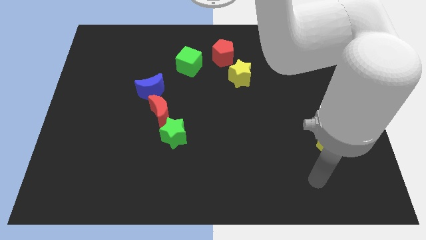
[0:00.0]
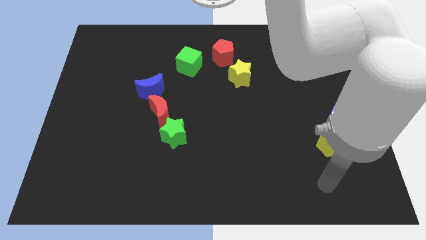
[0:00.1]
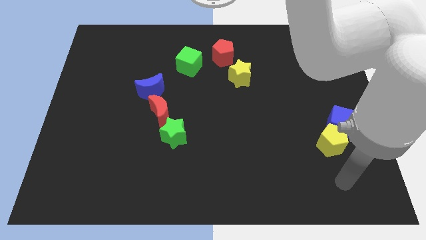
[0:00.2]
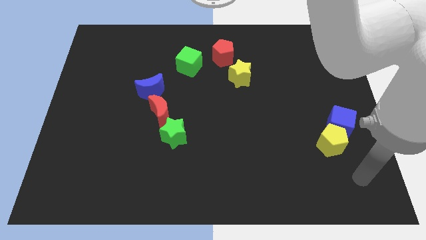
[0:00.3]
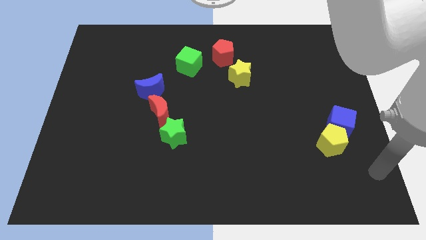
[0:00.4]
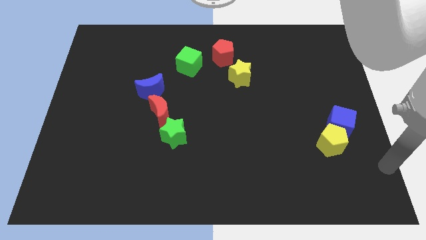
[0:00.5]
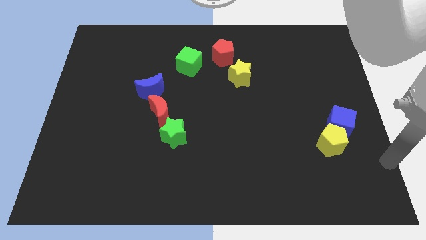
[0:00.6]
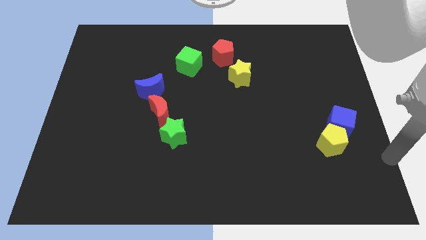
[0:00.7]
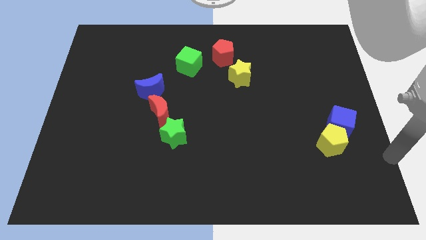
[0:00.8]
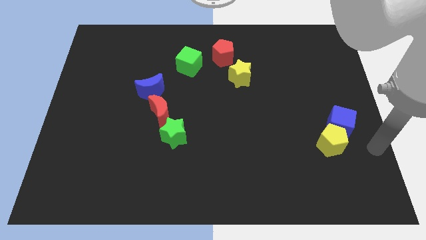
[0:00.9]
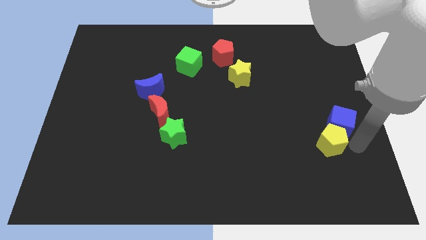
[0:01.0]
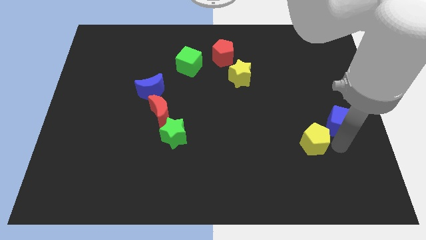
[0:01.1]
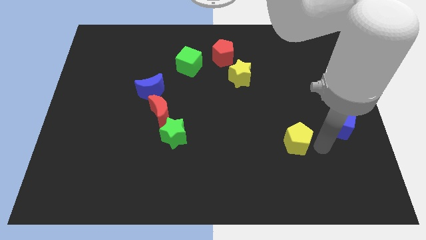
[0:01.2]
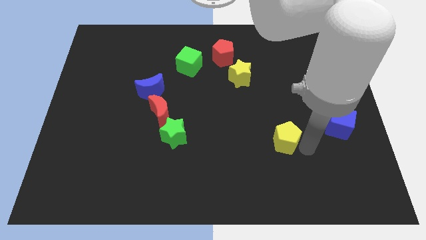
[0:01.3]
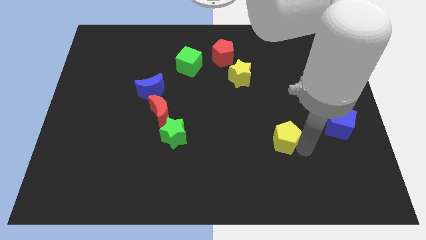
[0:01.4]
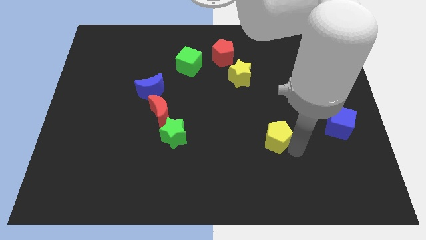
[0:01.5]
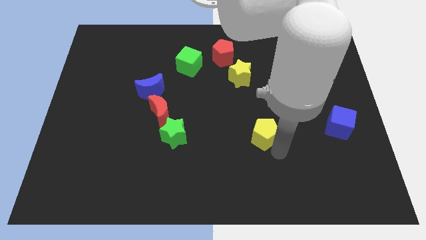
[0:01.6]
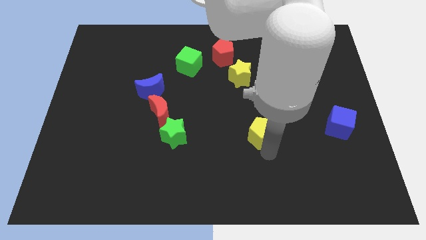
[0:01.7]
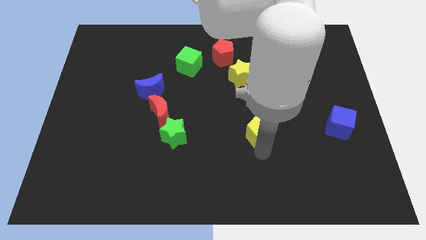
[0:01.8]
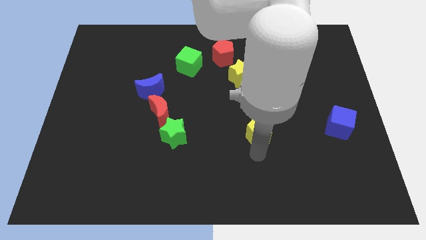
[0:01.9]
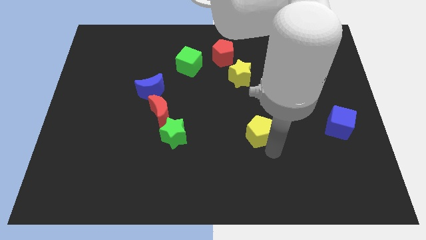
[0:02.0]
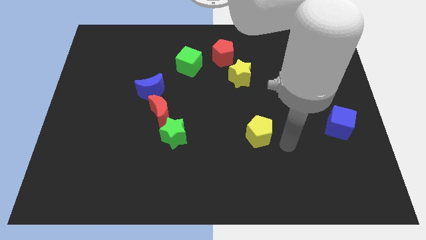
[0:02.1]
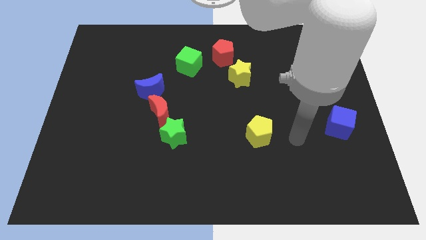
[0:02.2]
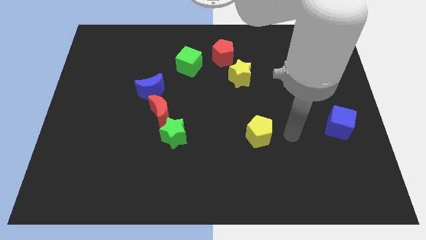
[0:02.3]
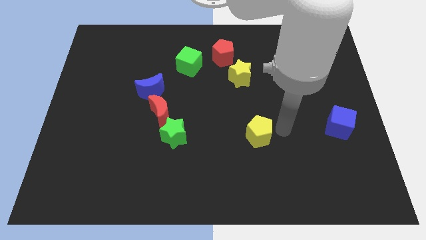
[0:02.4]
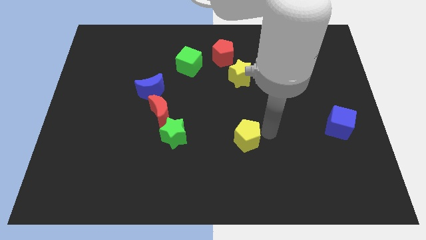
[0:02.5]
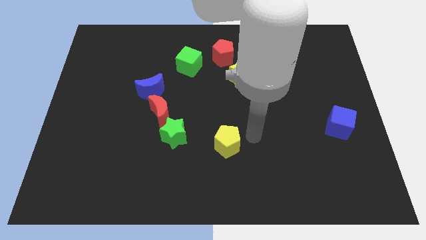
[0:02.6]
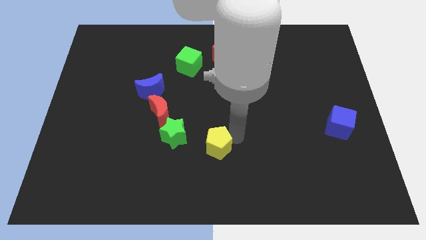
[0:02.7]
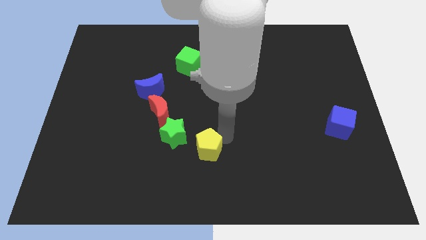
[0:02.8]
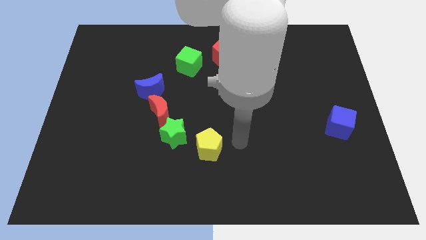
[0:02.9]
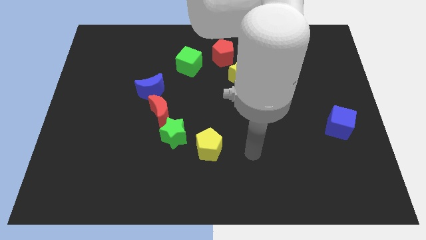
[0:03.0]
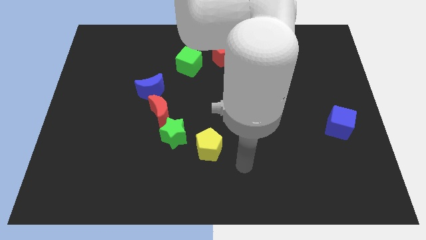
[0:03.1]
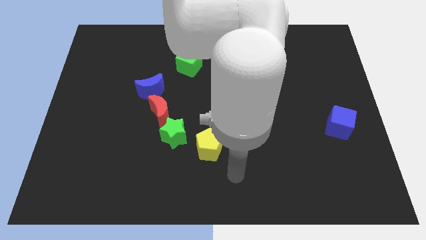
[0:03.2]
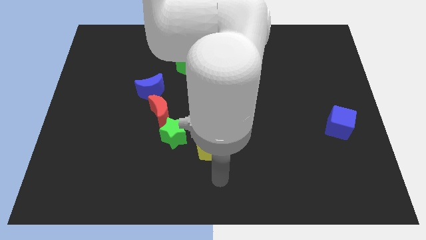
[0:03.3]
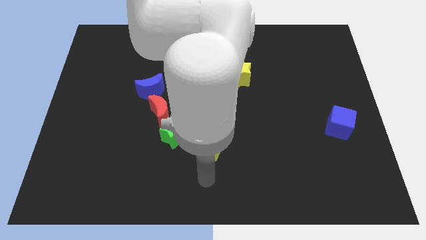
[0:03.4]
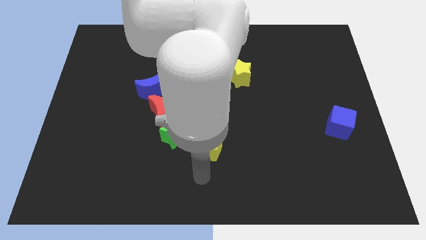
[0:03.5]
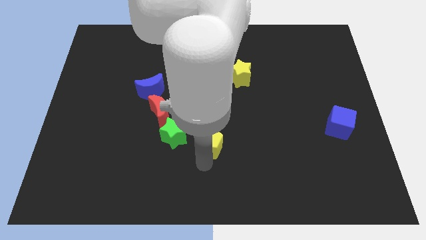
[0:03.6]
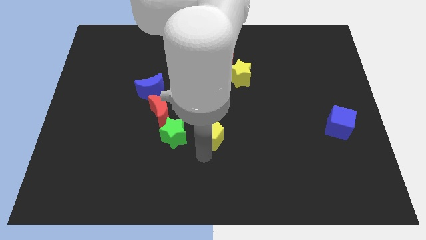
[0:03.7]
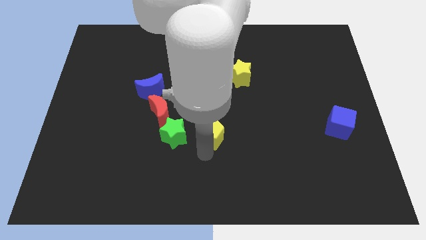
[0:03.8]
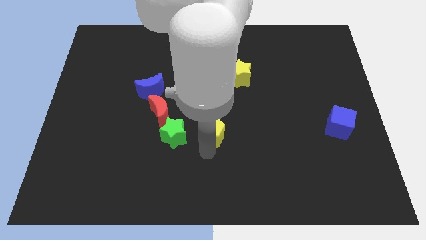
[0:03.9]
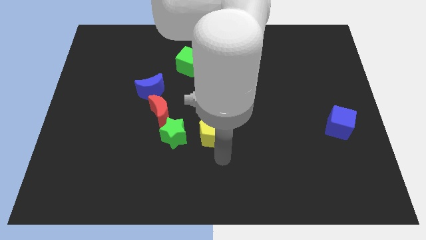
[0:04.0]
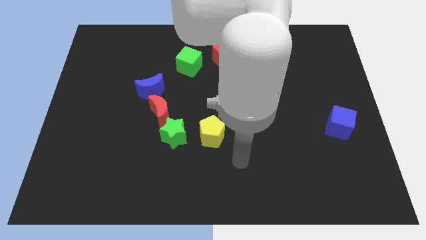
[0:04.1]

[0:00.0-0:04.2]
place the yellow pentagon to the right of the green star

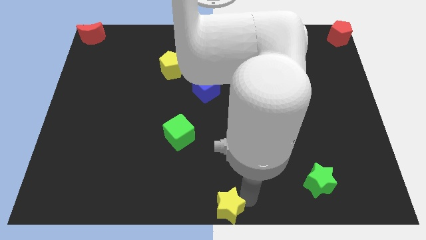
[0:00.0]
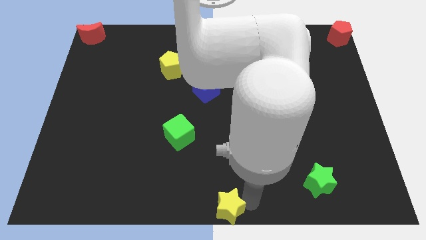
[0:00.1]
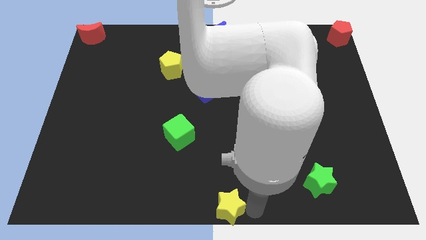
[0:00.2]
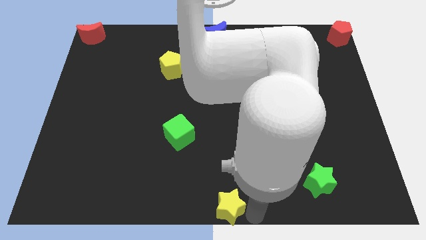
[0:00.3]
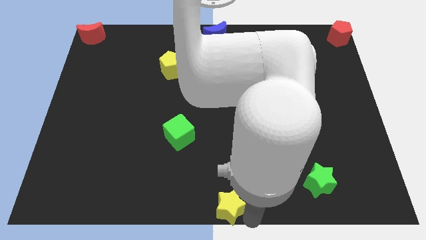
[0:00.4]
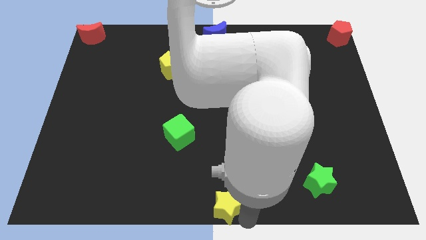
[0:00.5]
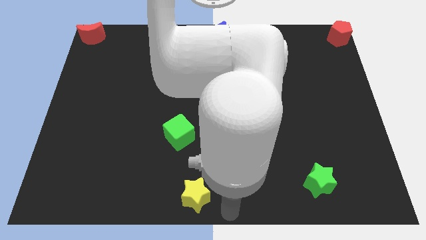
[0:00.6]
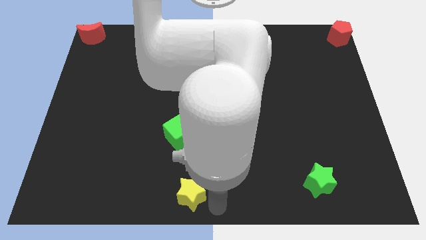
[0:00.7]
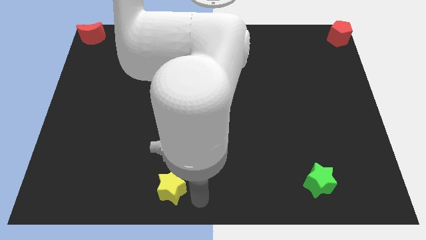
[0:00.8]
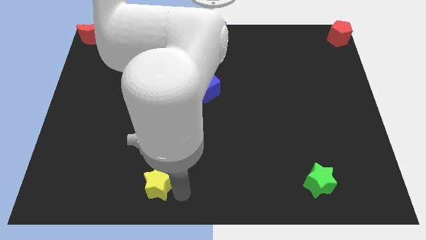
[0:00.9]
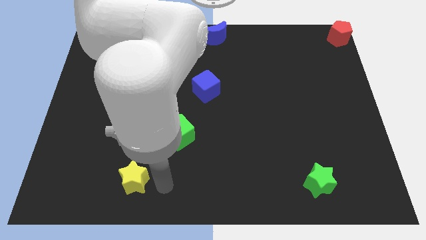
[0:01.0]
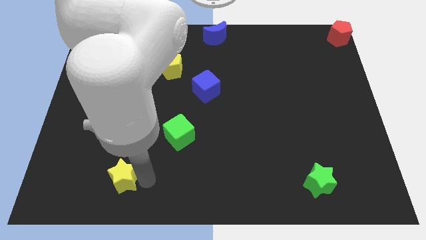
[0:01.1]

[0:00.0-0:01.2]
place the yellow star diagonally bottom left to the green cube

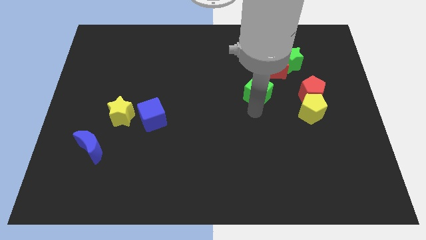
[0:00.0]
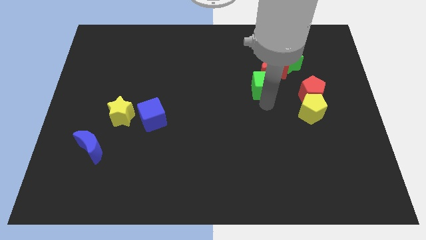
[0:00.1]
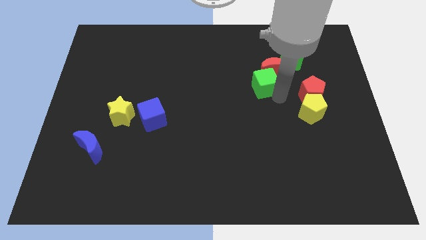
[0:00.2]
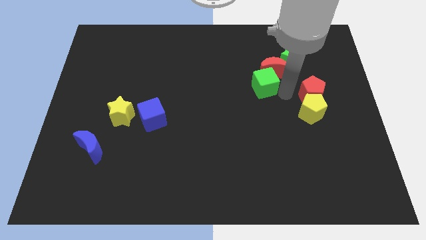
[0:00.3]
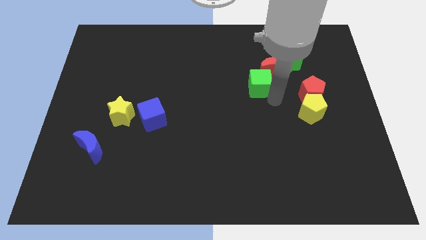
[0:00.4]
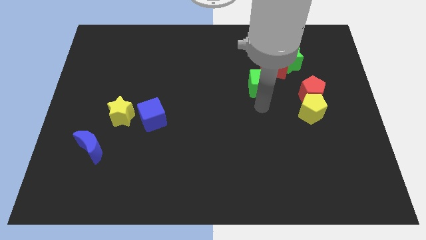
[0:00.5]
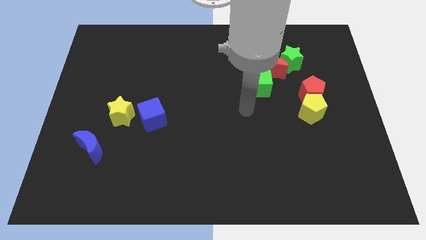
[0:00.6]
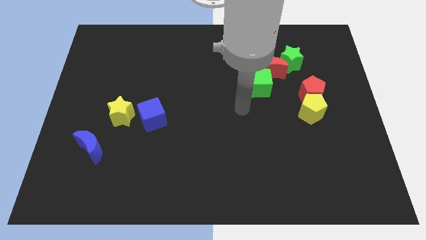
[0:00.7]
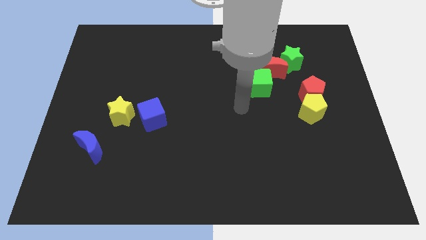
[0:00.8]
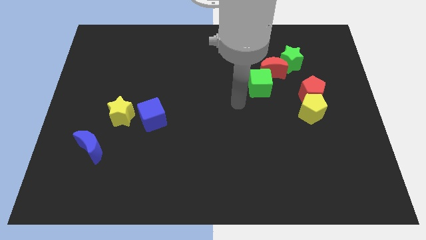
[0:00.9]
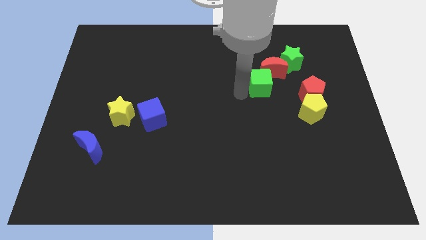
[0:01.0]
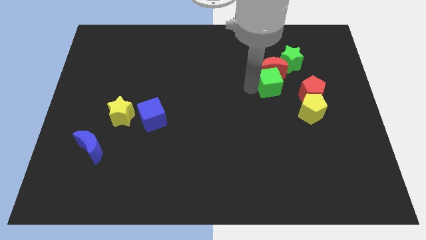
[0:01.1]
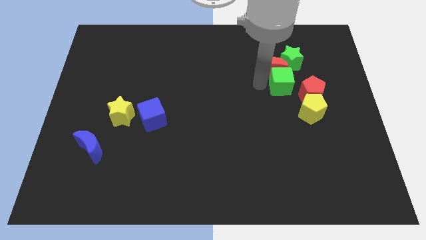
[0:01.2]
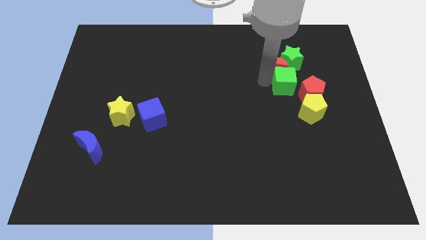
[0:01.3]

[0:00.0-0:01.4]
attach the green cube to the red moon

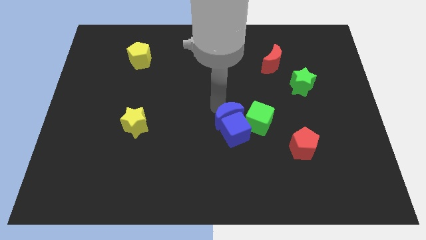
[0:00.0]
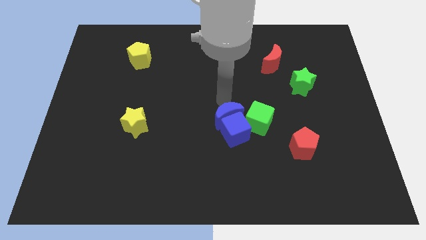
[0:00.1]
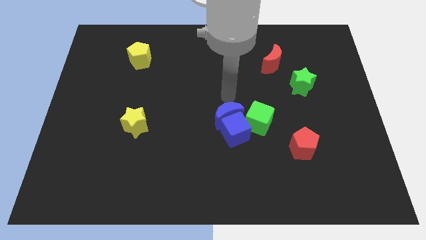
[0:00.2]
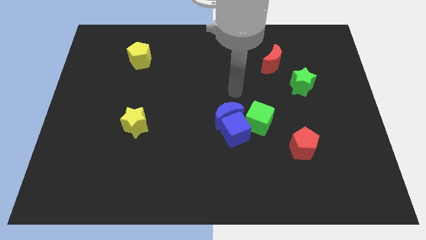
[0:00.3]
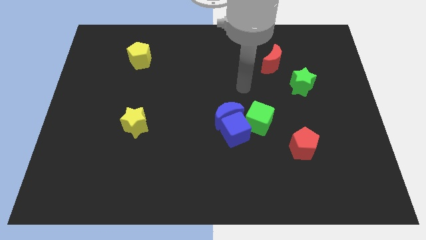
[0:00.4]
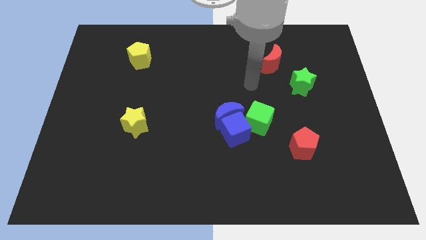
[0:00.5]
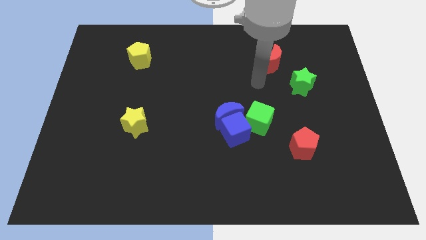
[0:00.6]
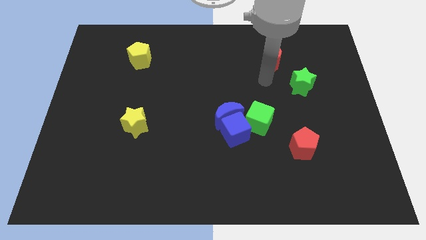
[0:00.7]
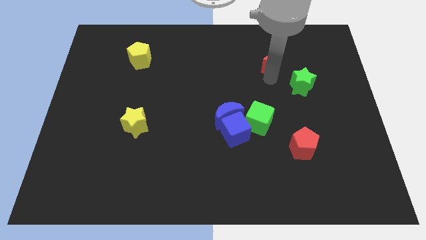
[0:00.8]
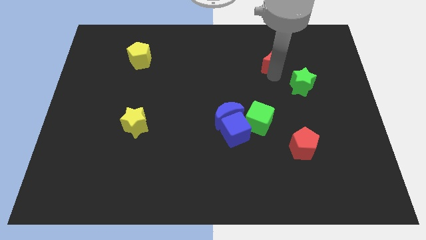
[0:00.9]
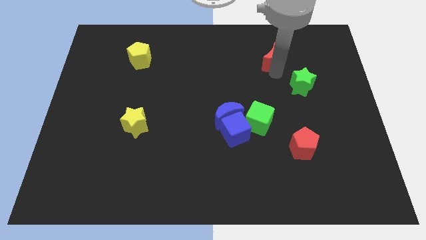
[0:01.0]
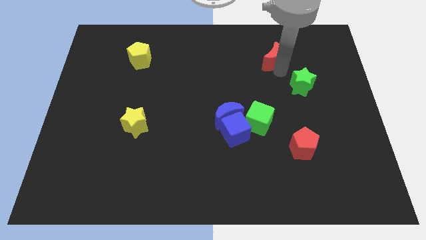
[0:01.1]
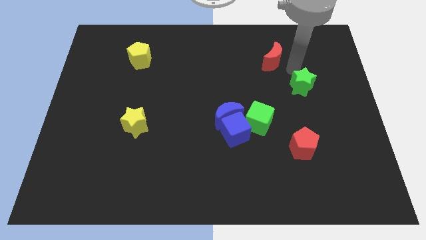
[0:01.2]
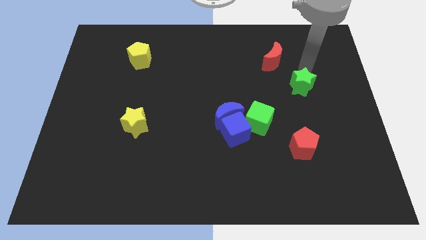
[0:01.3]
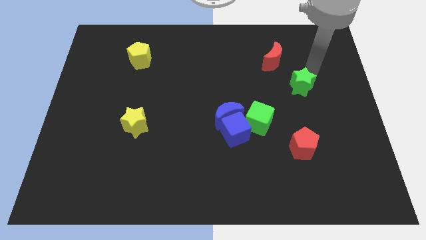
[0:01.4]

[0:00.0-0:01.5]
move the arm close to the green star

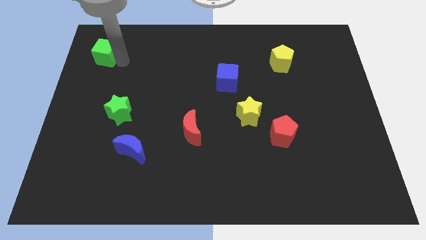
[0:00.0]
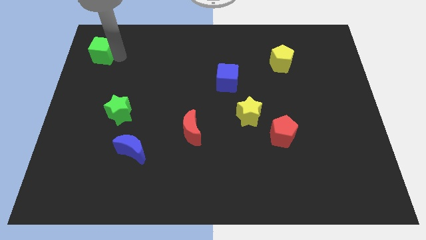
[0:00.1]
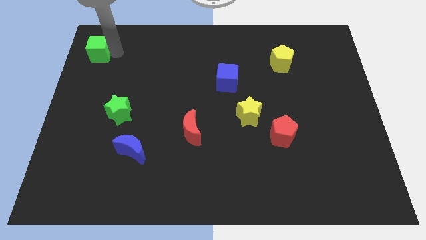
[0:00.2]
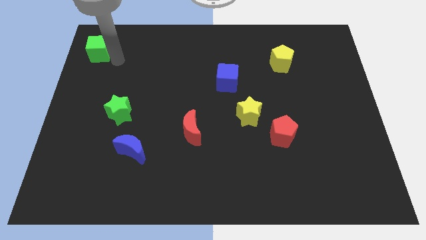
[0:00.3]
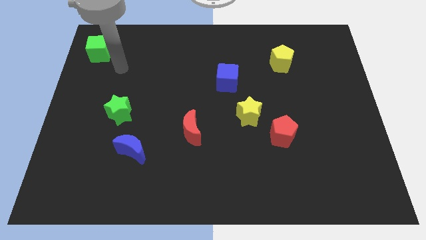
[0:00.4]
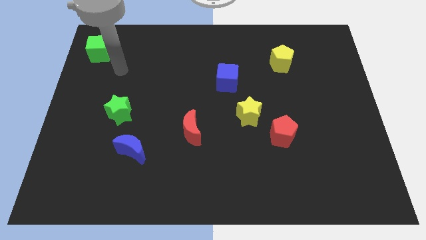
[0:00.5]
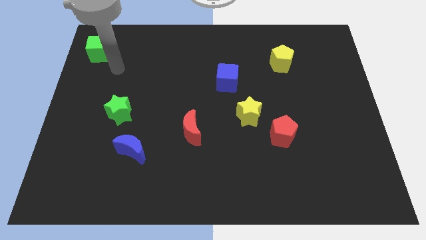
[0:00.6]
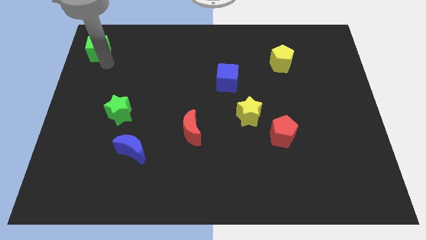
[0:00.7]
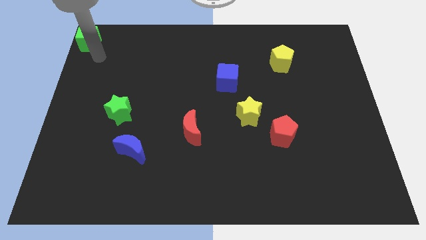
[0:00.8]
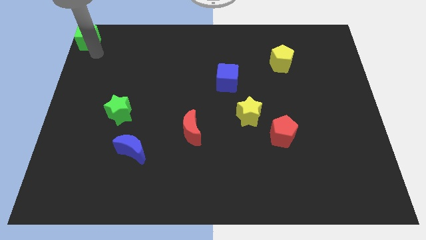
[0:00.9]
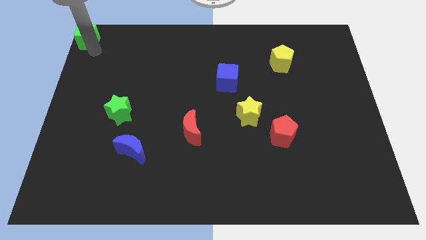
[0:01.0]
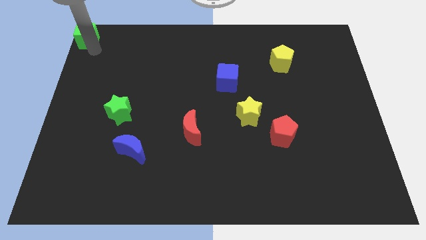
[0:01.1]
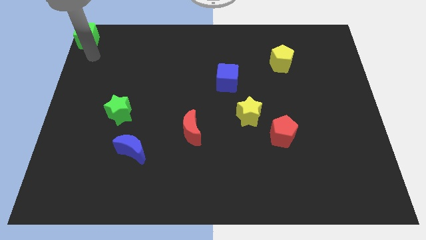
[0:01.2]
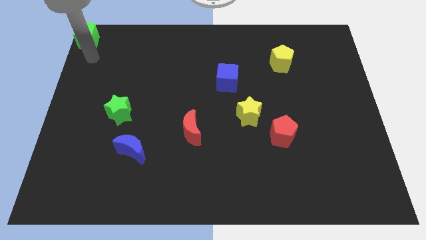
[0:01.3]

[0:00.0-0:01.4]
place the green cube at the top left corner of the board
